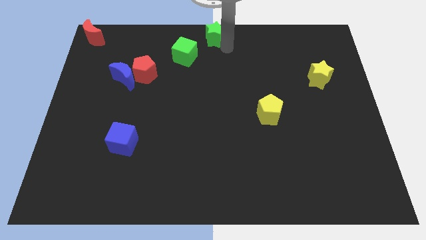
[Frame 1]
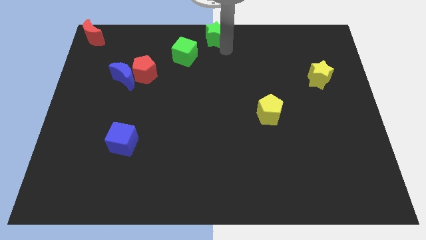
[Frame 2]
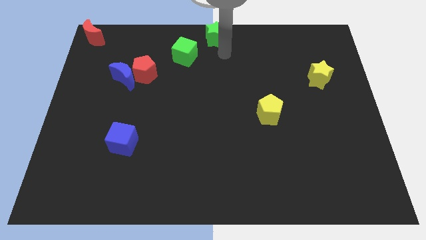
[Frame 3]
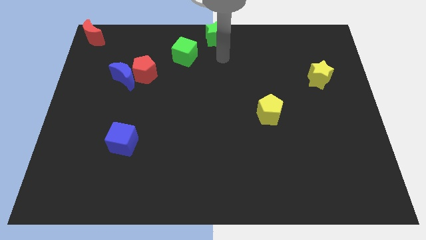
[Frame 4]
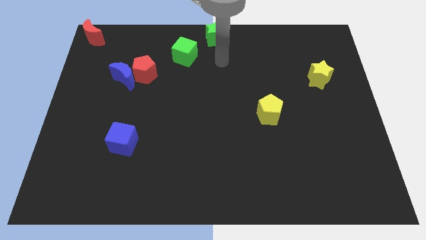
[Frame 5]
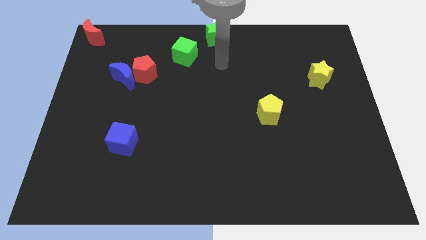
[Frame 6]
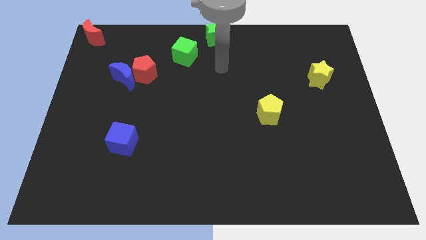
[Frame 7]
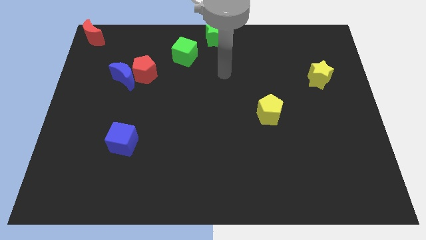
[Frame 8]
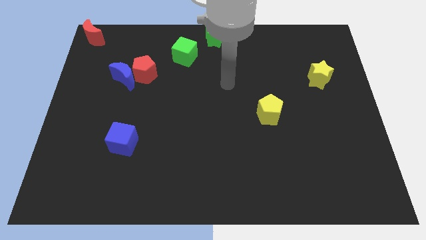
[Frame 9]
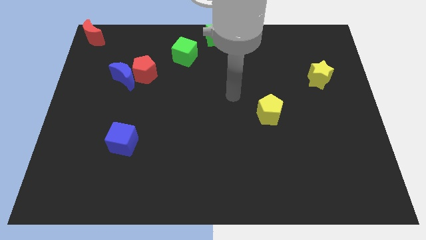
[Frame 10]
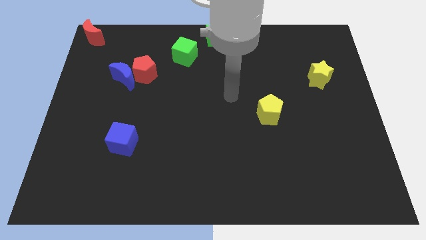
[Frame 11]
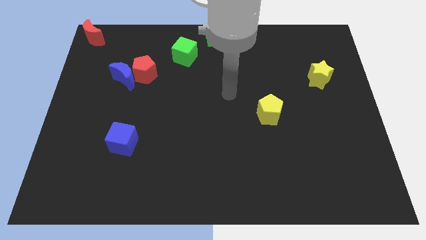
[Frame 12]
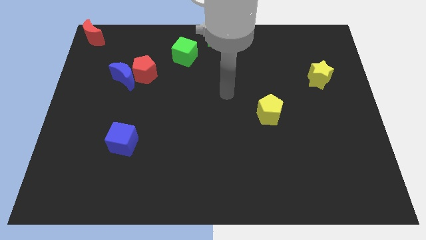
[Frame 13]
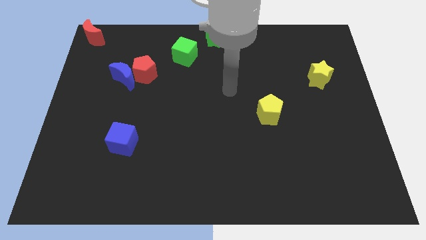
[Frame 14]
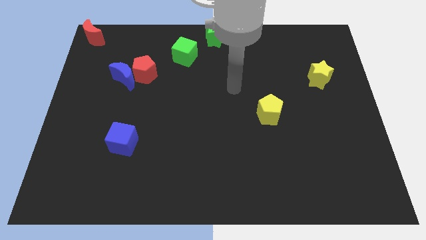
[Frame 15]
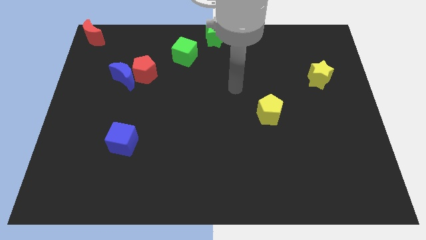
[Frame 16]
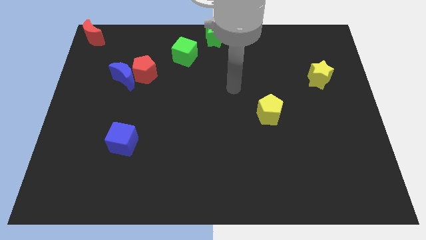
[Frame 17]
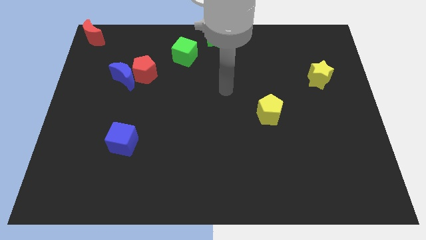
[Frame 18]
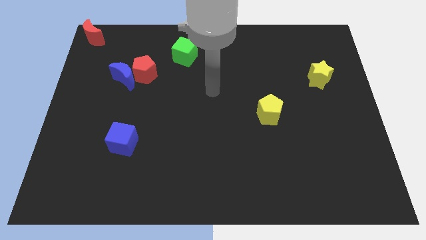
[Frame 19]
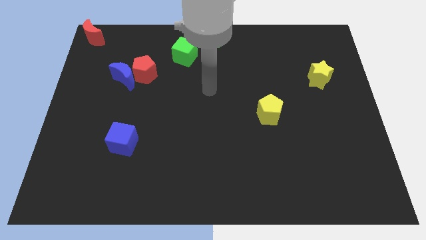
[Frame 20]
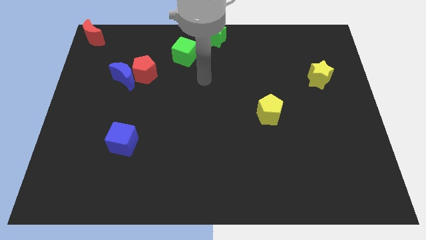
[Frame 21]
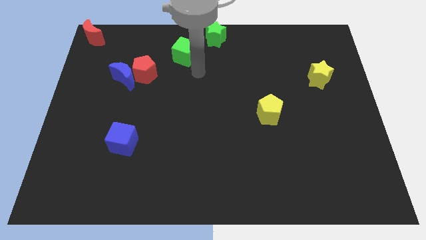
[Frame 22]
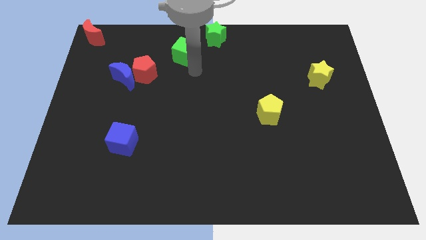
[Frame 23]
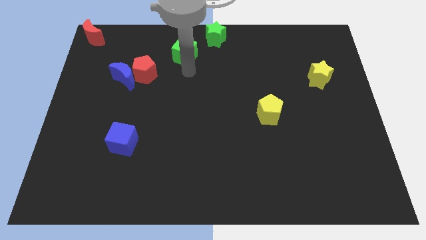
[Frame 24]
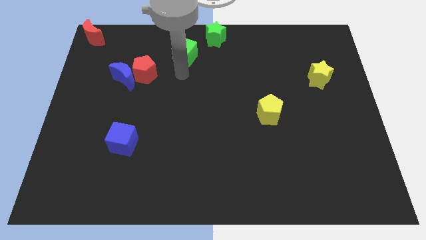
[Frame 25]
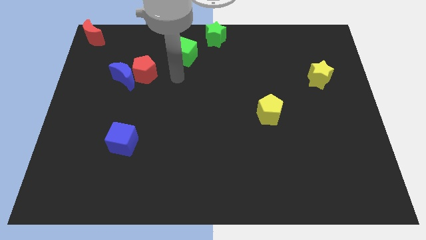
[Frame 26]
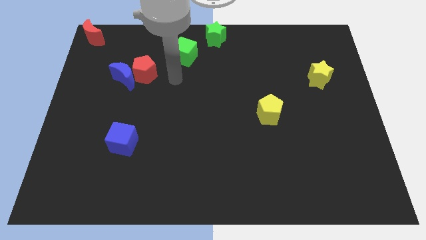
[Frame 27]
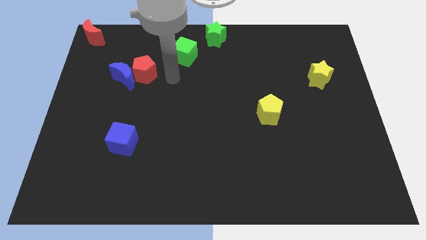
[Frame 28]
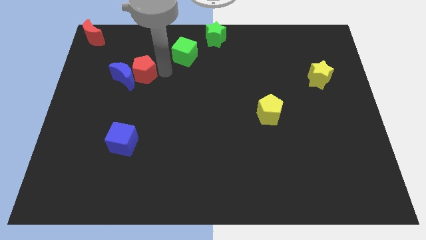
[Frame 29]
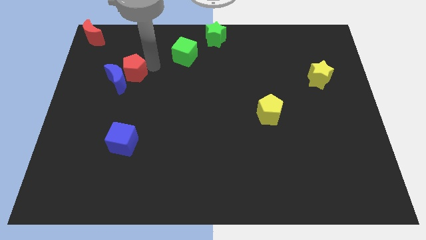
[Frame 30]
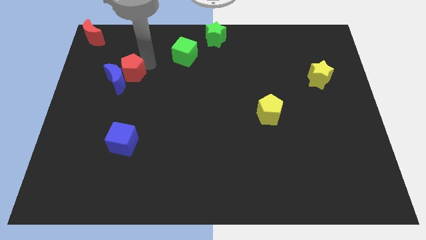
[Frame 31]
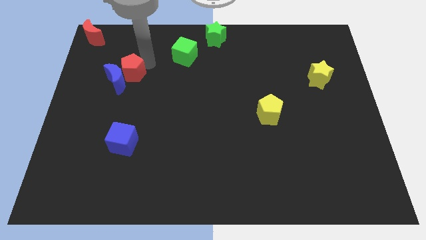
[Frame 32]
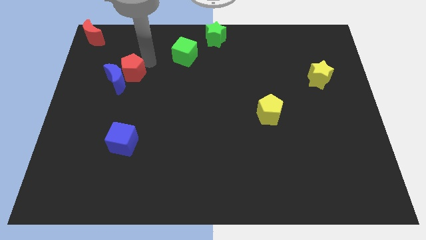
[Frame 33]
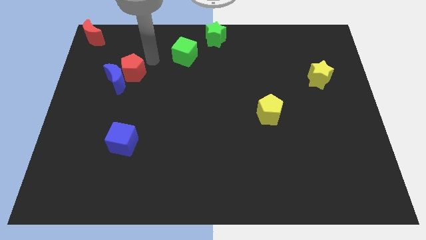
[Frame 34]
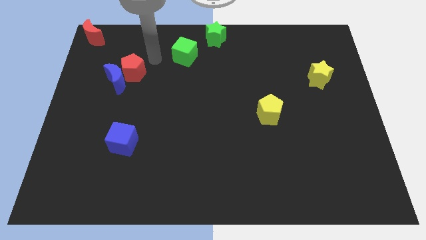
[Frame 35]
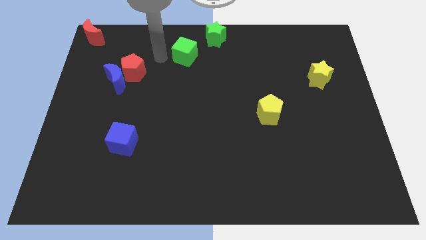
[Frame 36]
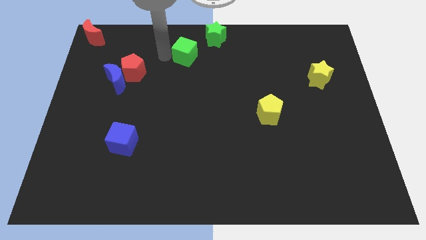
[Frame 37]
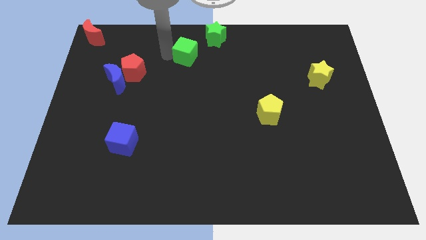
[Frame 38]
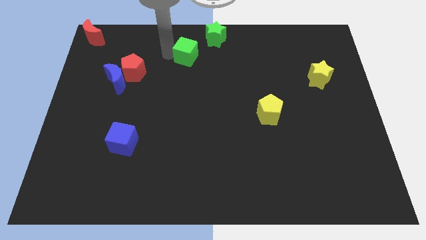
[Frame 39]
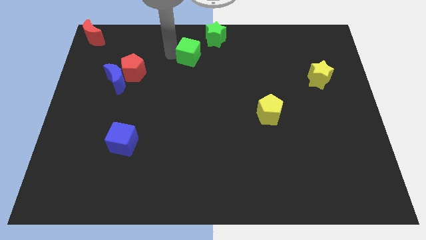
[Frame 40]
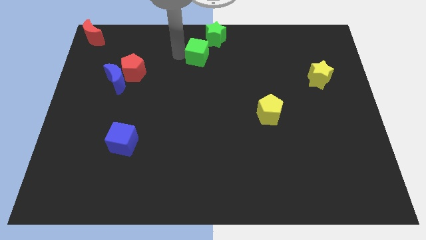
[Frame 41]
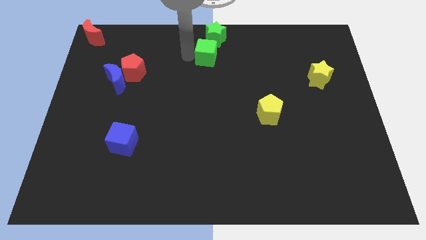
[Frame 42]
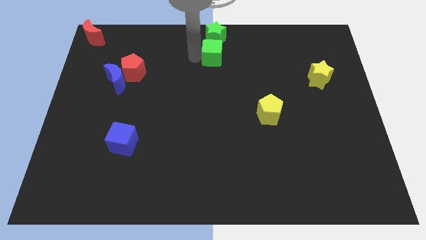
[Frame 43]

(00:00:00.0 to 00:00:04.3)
put the green cube below the green star

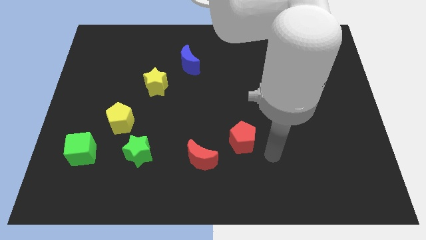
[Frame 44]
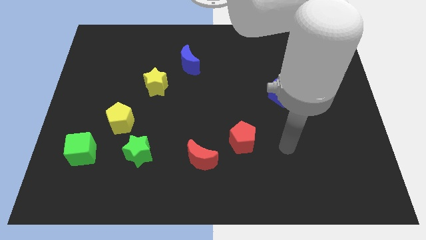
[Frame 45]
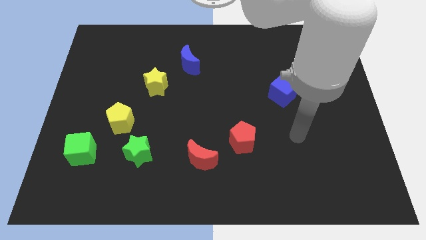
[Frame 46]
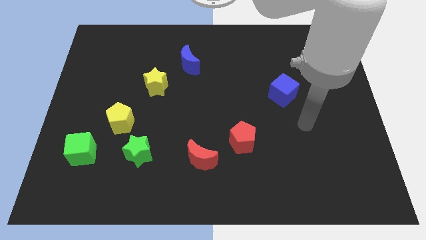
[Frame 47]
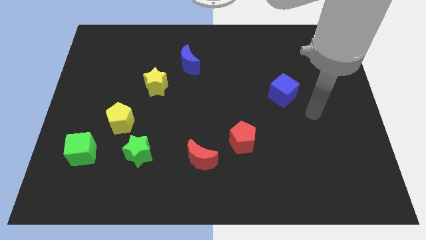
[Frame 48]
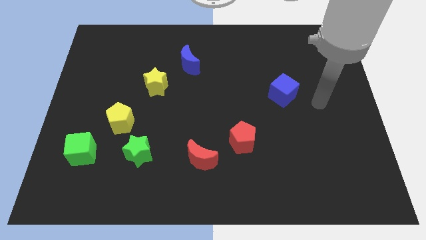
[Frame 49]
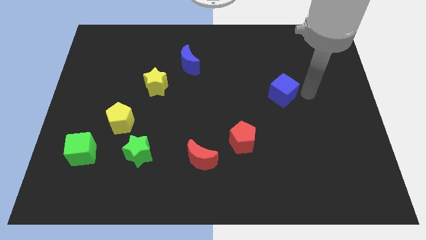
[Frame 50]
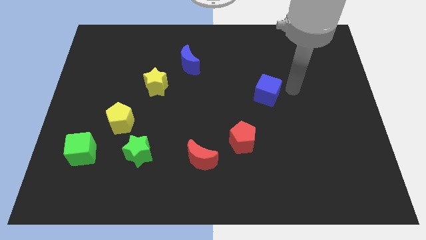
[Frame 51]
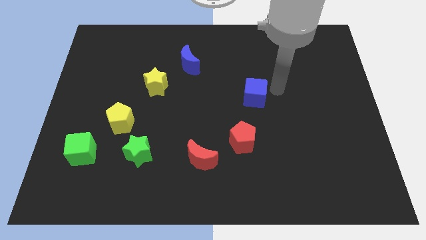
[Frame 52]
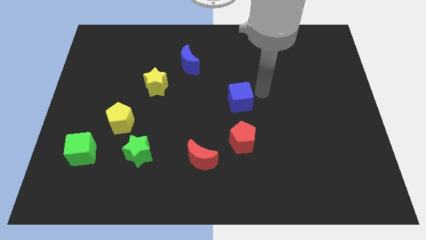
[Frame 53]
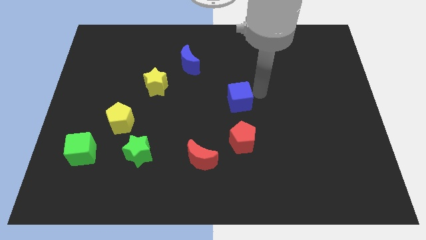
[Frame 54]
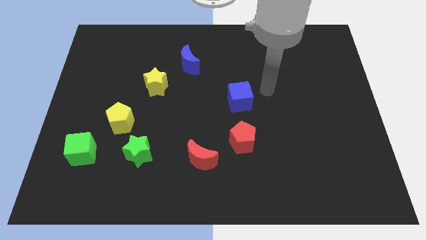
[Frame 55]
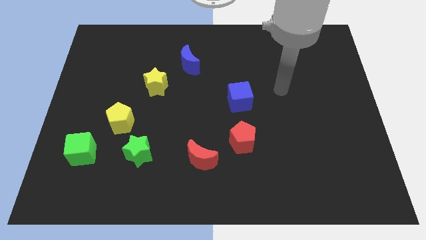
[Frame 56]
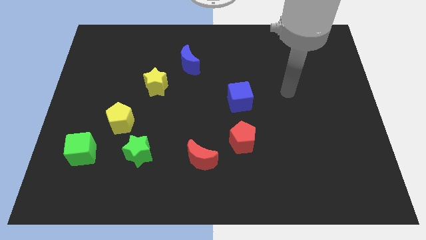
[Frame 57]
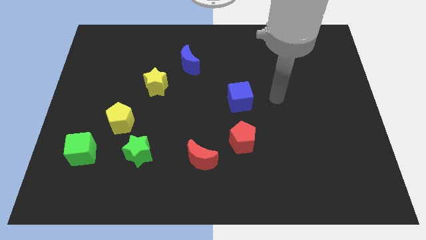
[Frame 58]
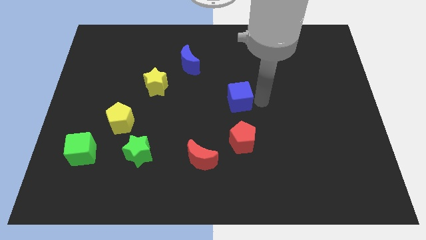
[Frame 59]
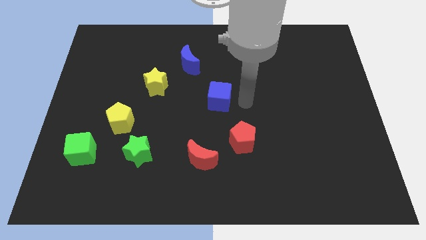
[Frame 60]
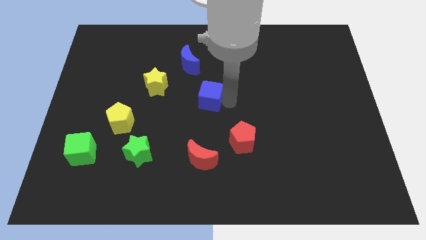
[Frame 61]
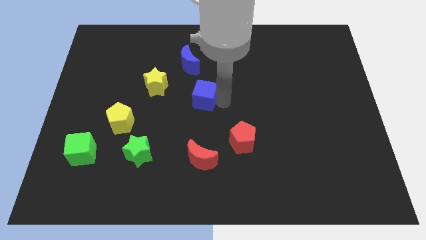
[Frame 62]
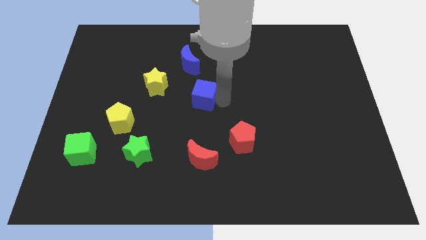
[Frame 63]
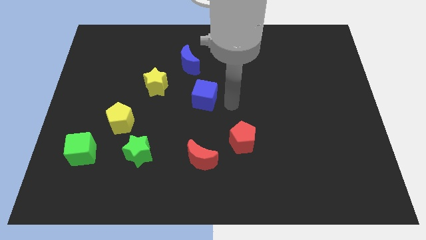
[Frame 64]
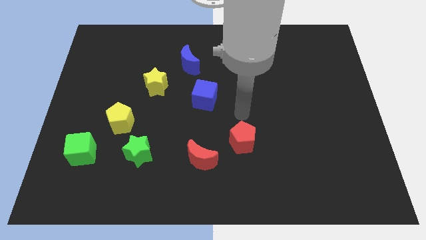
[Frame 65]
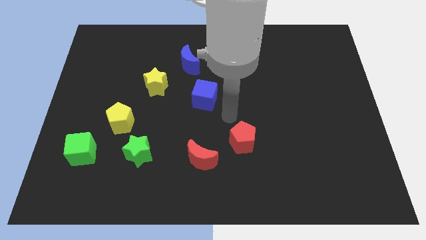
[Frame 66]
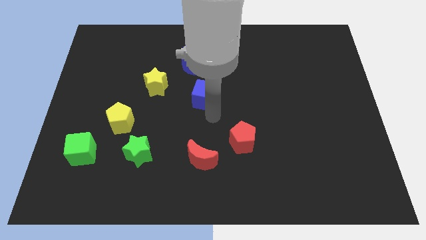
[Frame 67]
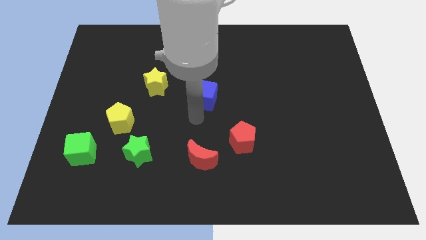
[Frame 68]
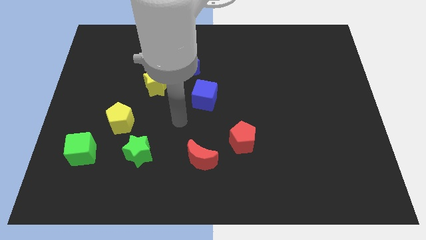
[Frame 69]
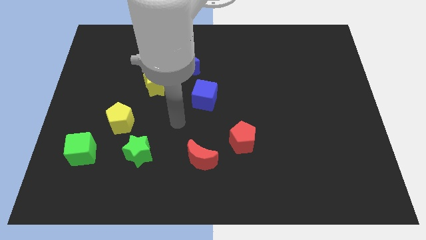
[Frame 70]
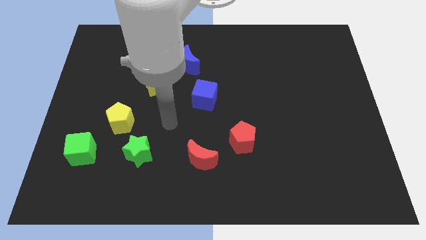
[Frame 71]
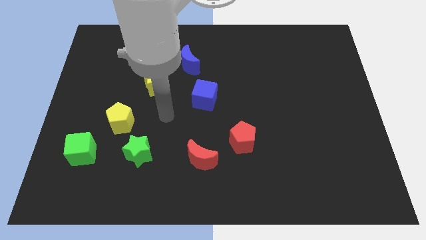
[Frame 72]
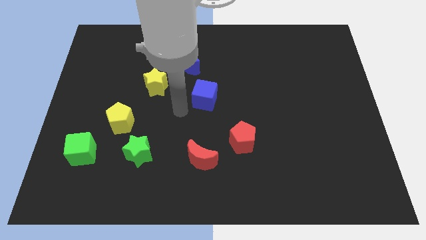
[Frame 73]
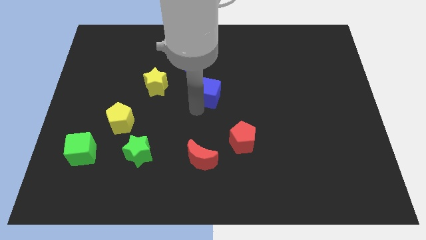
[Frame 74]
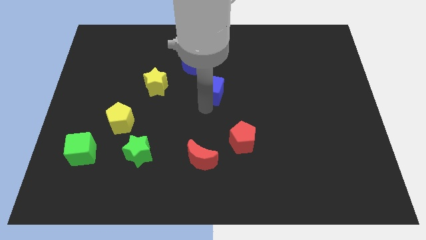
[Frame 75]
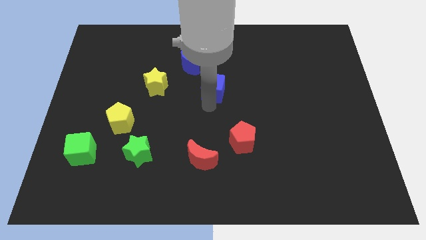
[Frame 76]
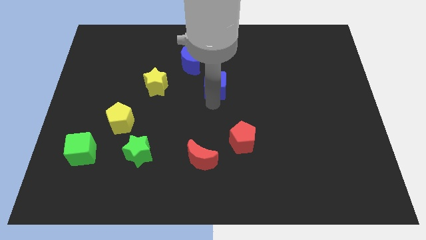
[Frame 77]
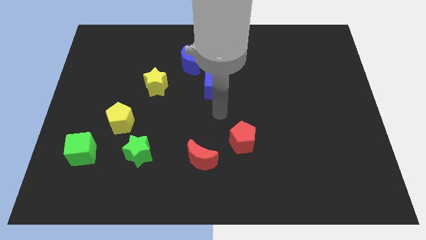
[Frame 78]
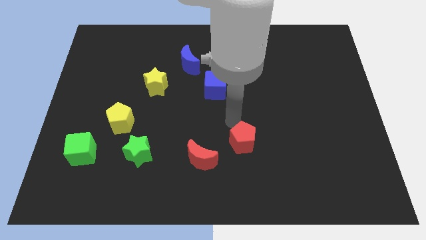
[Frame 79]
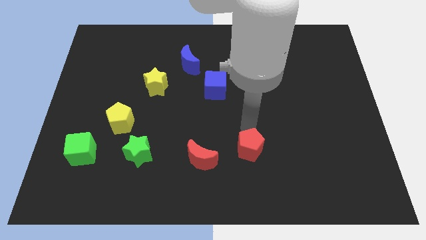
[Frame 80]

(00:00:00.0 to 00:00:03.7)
place the blue cube to the right of the yellow star

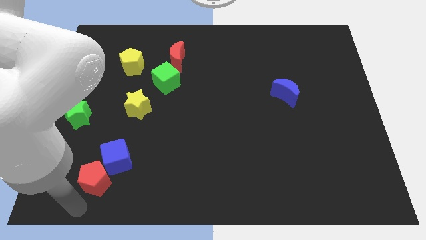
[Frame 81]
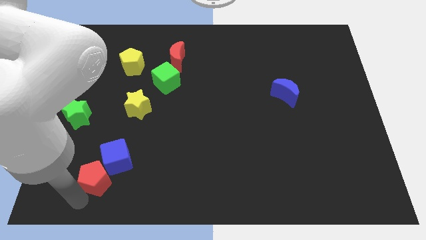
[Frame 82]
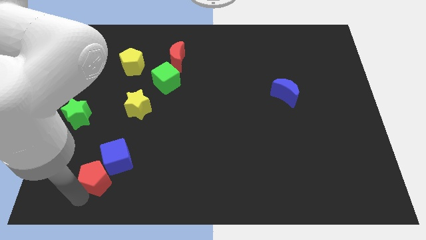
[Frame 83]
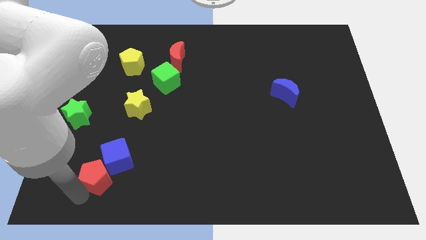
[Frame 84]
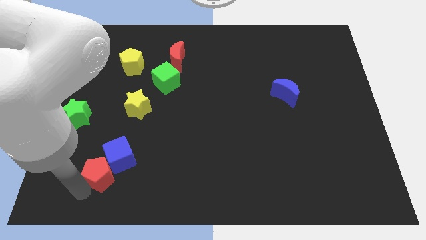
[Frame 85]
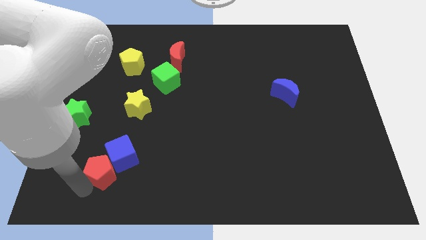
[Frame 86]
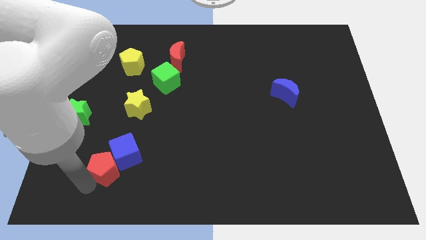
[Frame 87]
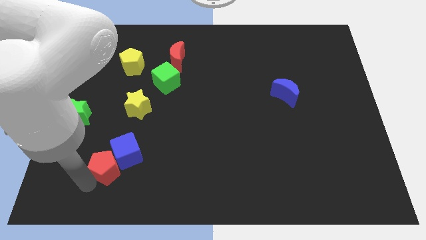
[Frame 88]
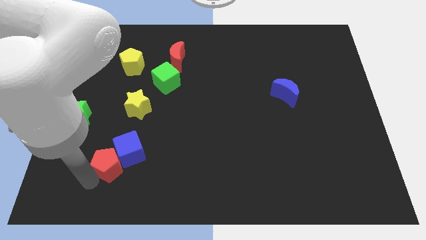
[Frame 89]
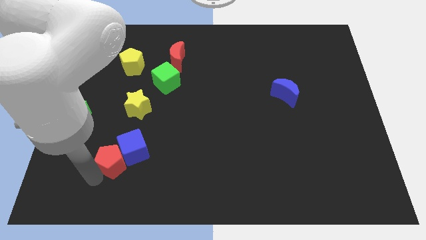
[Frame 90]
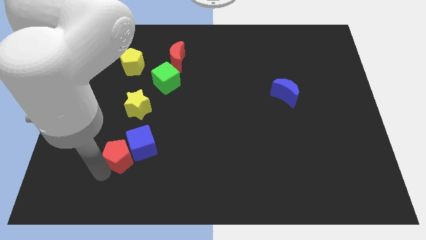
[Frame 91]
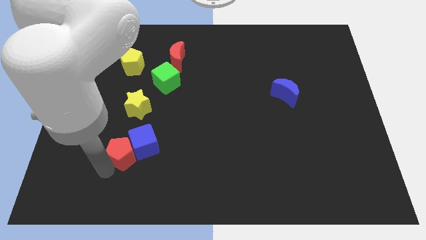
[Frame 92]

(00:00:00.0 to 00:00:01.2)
push the blue cube with the red pentagon up slightly
